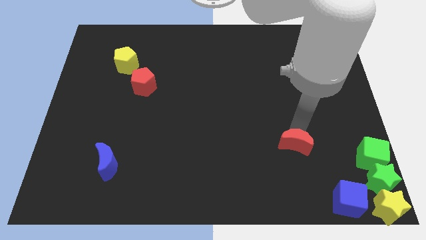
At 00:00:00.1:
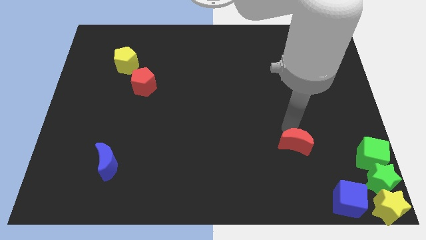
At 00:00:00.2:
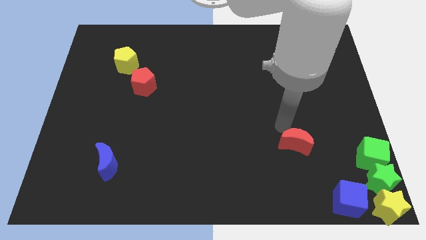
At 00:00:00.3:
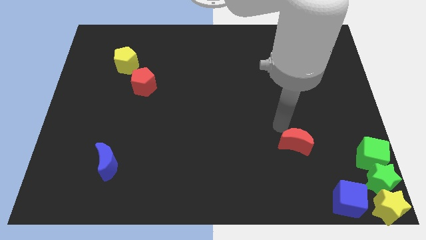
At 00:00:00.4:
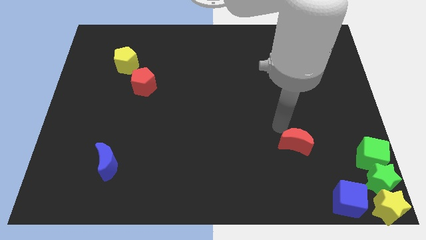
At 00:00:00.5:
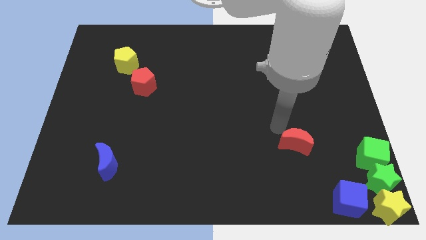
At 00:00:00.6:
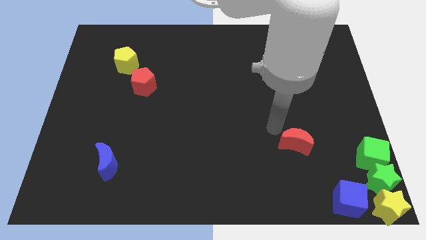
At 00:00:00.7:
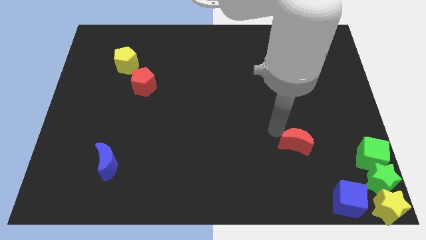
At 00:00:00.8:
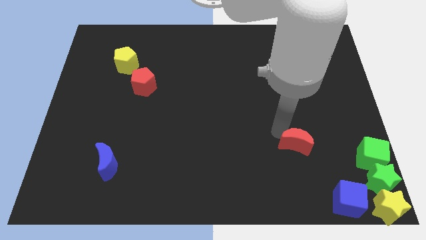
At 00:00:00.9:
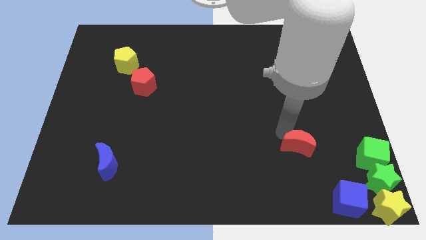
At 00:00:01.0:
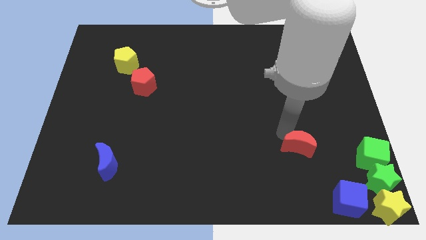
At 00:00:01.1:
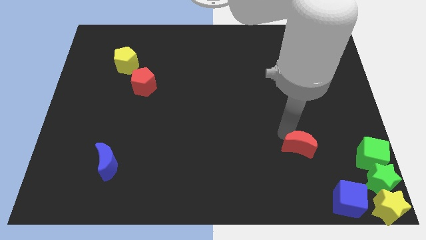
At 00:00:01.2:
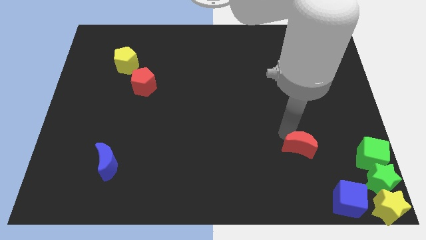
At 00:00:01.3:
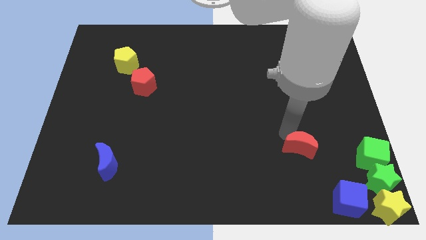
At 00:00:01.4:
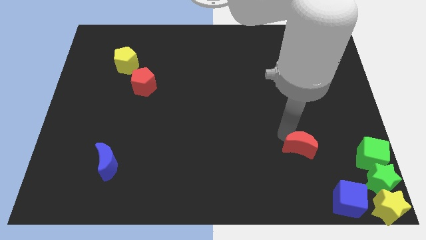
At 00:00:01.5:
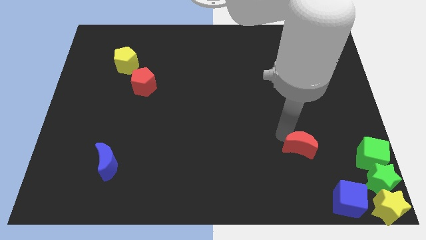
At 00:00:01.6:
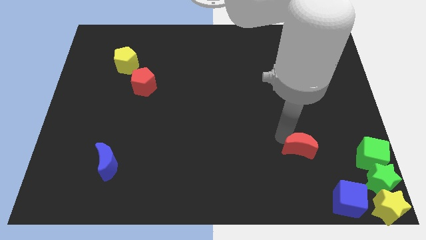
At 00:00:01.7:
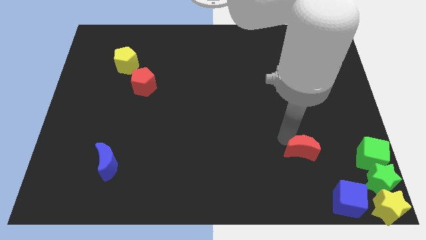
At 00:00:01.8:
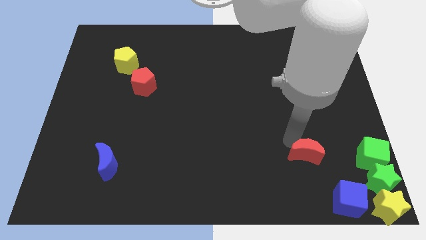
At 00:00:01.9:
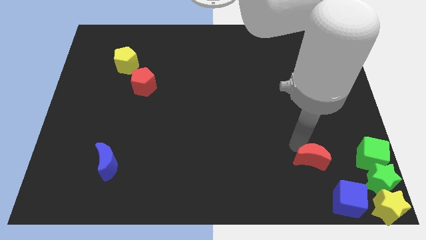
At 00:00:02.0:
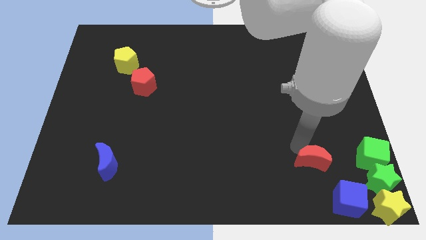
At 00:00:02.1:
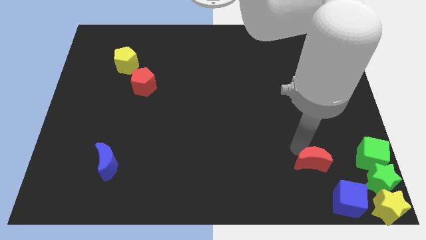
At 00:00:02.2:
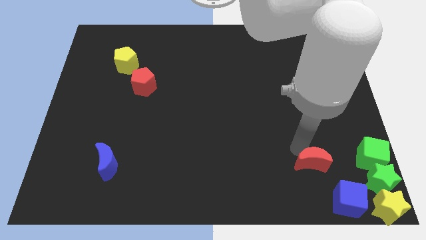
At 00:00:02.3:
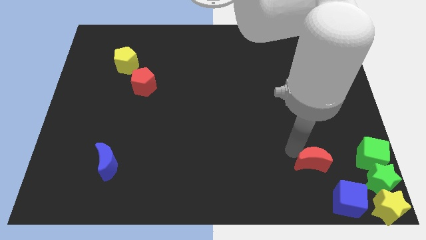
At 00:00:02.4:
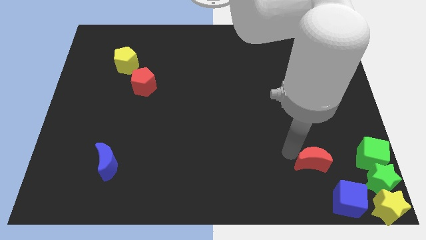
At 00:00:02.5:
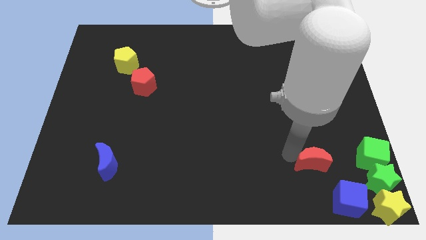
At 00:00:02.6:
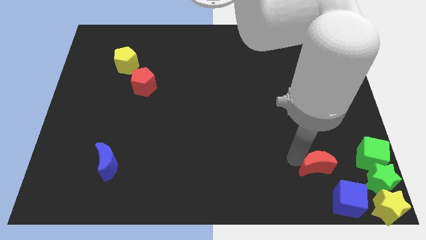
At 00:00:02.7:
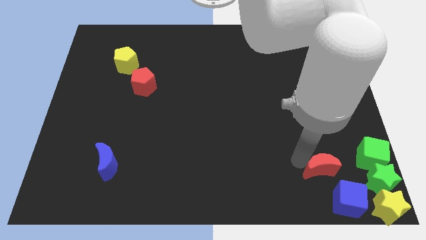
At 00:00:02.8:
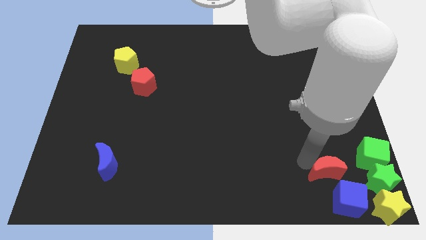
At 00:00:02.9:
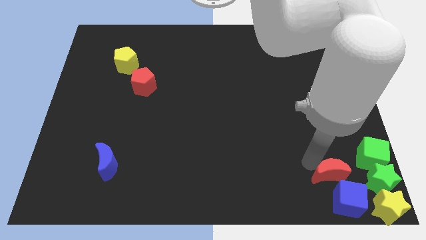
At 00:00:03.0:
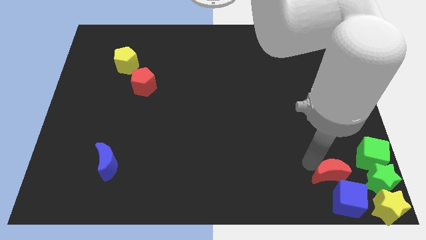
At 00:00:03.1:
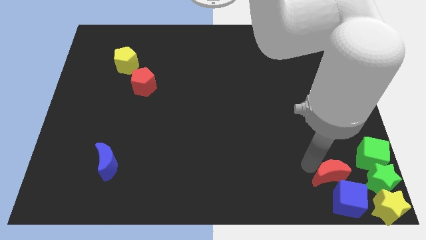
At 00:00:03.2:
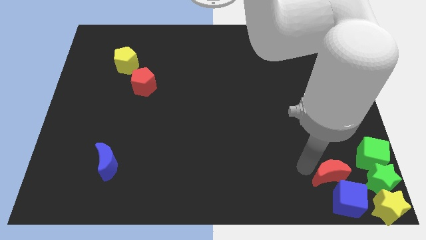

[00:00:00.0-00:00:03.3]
push the red moon to the group of the blocks

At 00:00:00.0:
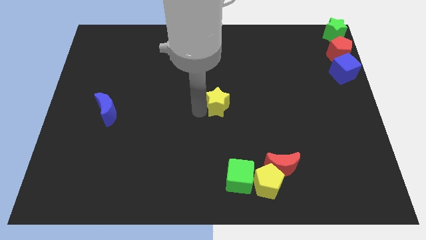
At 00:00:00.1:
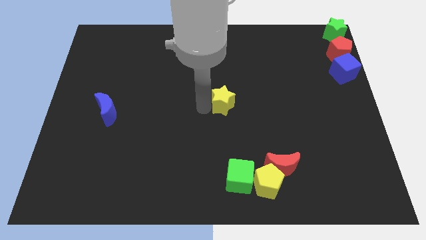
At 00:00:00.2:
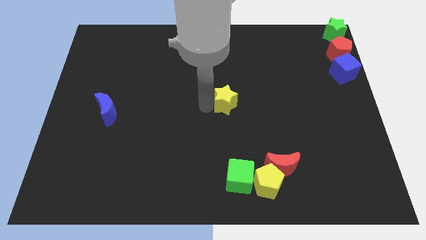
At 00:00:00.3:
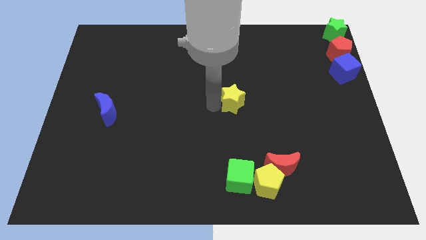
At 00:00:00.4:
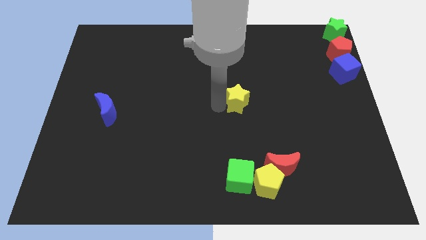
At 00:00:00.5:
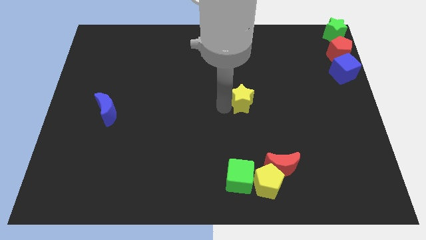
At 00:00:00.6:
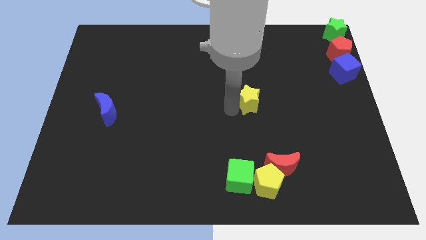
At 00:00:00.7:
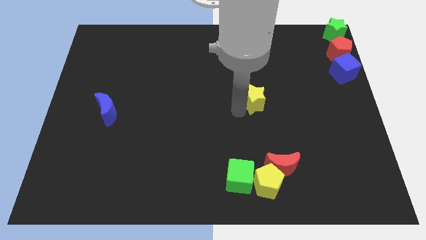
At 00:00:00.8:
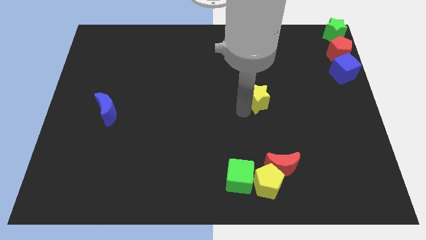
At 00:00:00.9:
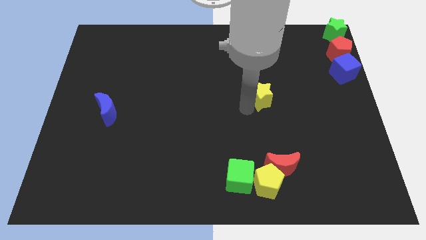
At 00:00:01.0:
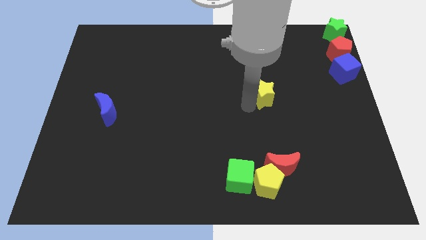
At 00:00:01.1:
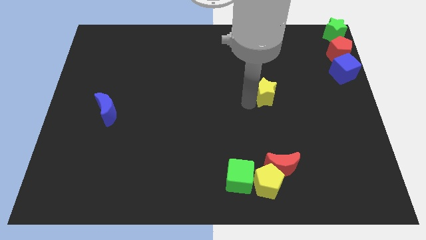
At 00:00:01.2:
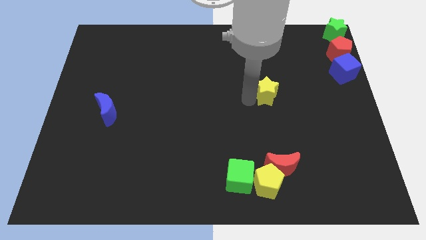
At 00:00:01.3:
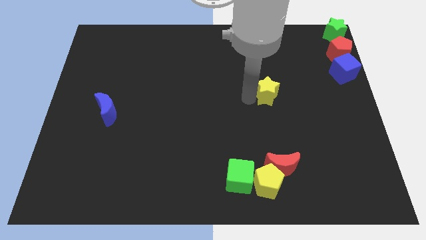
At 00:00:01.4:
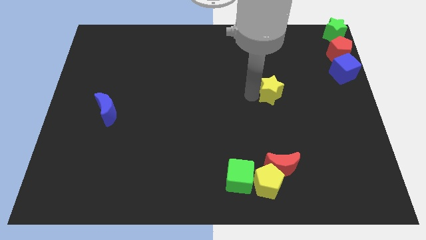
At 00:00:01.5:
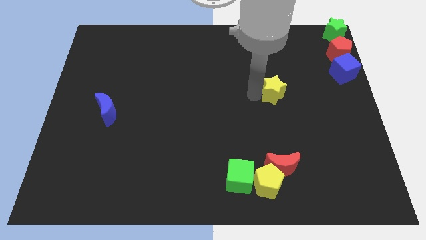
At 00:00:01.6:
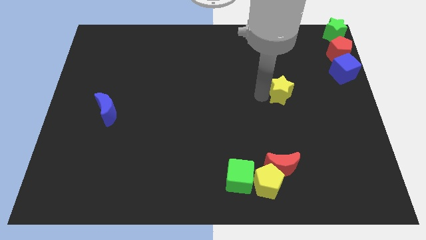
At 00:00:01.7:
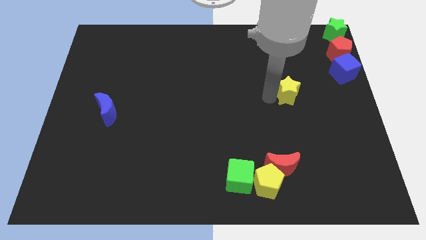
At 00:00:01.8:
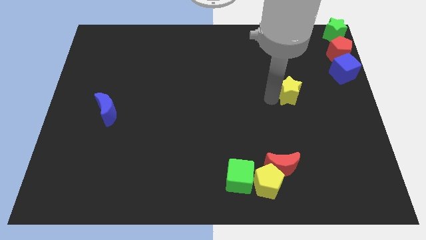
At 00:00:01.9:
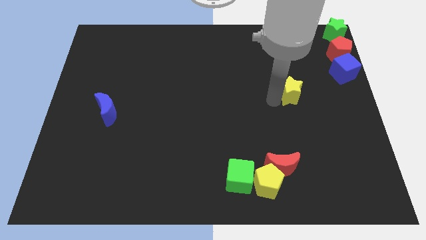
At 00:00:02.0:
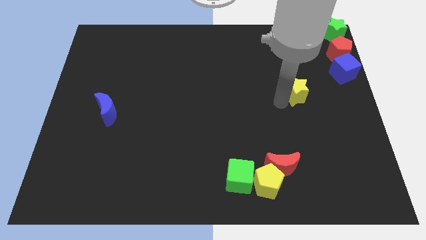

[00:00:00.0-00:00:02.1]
move the yellow pentagon towards the right of the board

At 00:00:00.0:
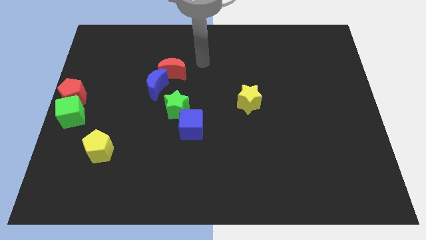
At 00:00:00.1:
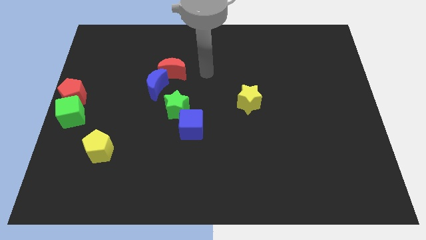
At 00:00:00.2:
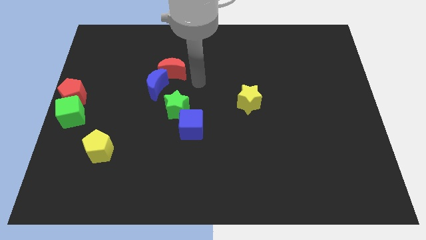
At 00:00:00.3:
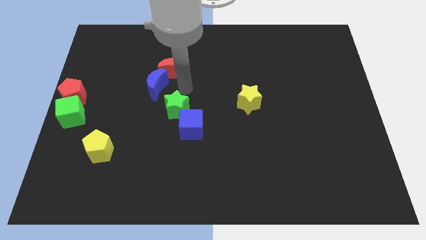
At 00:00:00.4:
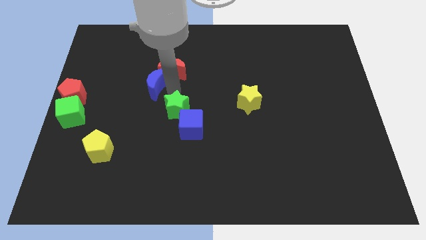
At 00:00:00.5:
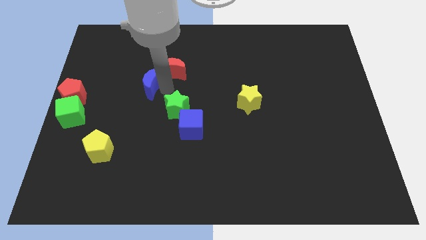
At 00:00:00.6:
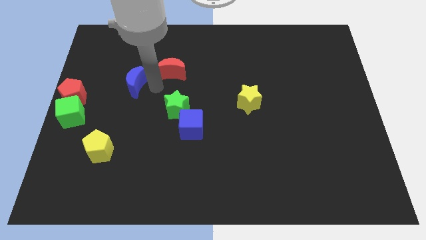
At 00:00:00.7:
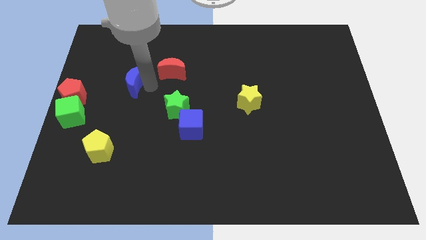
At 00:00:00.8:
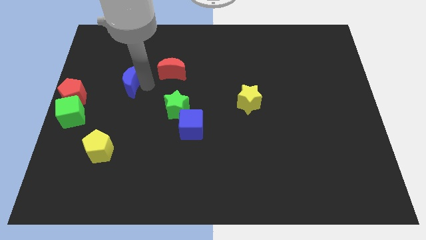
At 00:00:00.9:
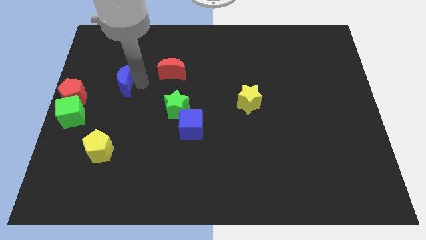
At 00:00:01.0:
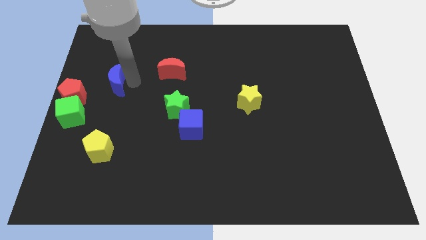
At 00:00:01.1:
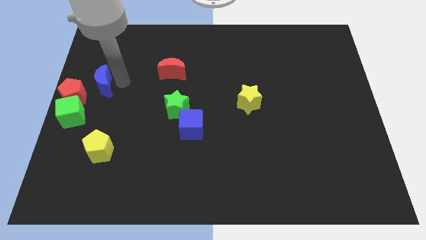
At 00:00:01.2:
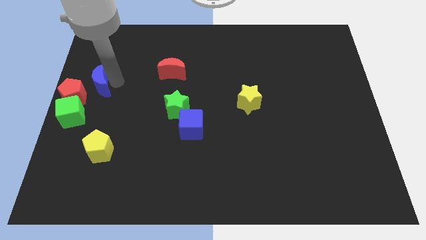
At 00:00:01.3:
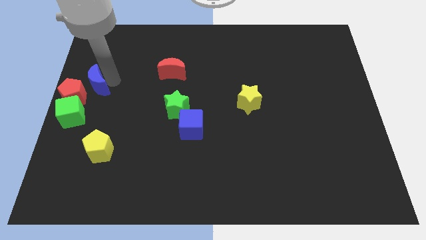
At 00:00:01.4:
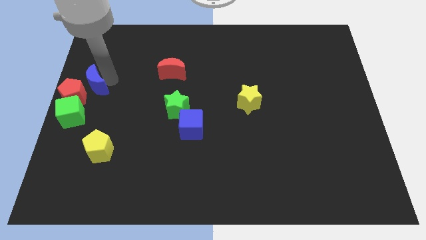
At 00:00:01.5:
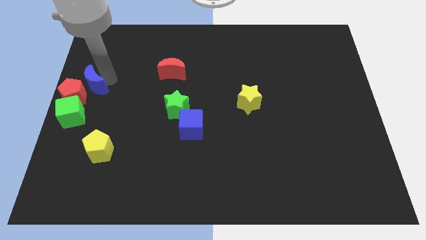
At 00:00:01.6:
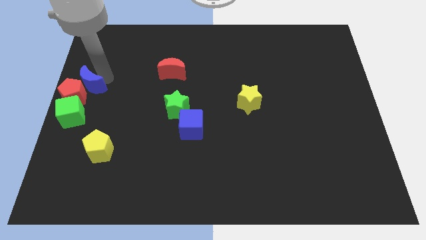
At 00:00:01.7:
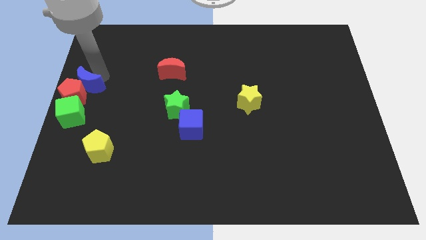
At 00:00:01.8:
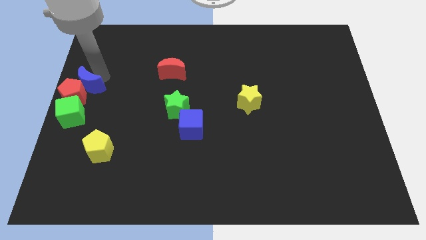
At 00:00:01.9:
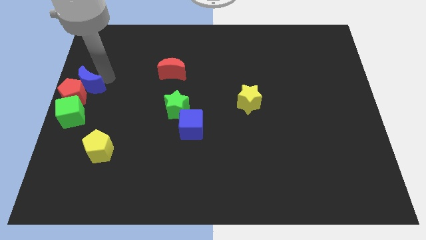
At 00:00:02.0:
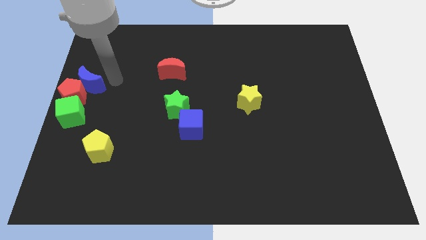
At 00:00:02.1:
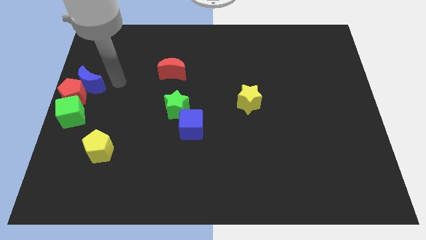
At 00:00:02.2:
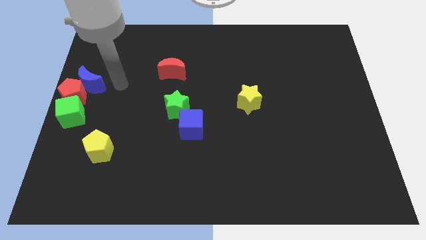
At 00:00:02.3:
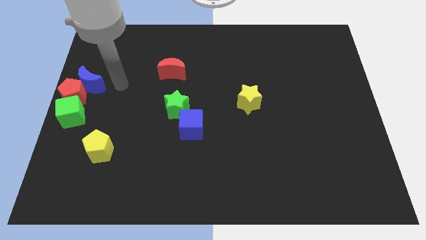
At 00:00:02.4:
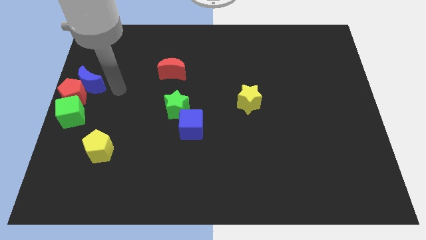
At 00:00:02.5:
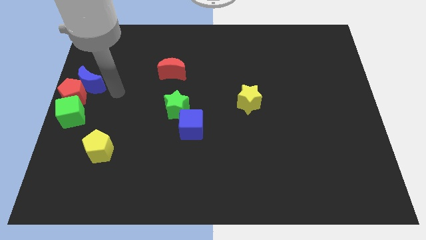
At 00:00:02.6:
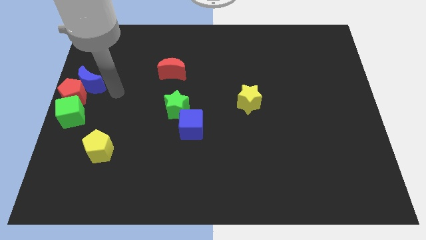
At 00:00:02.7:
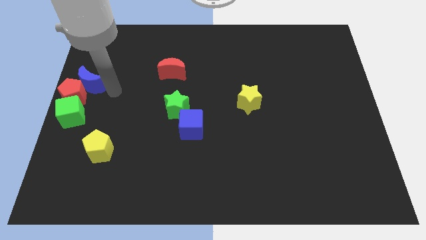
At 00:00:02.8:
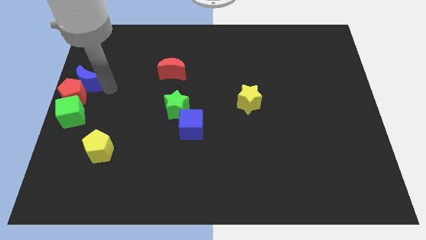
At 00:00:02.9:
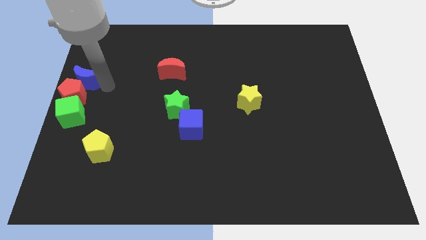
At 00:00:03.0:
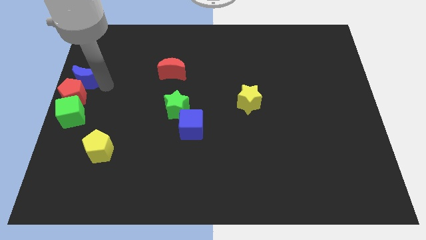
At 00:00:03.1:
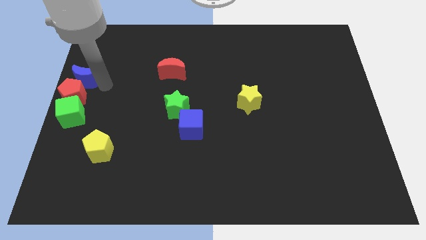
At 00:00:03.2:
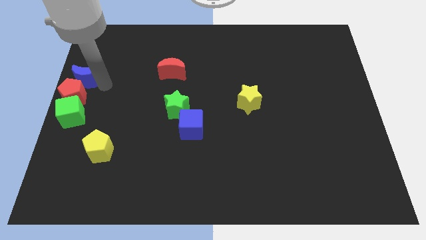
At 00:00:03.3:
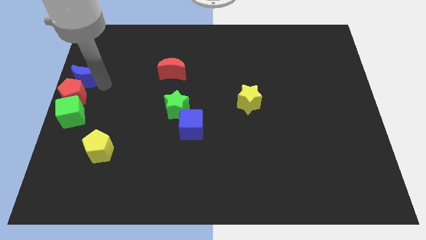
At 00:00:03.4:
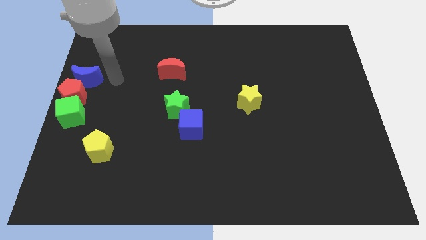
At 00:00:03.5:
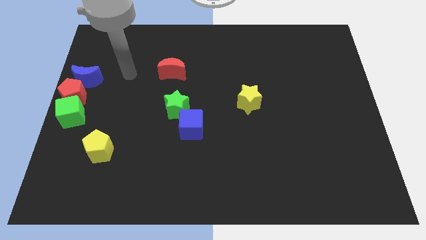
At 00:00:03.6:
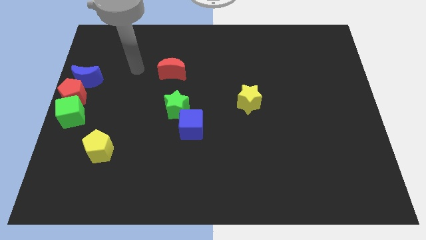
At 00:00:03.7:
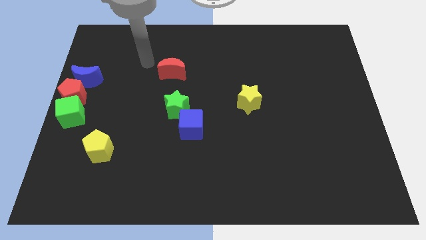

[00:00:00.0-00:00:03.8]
push the blue crescent to the top right side of the red pentagon
